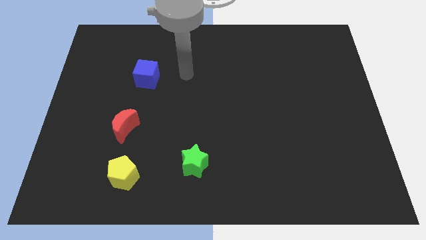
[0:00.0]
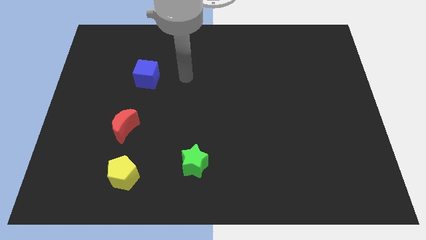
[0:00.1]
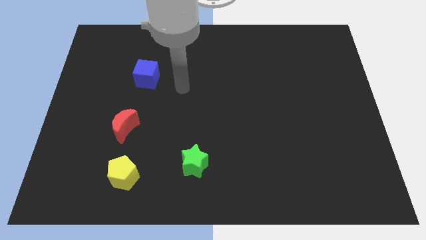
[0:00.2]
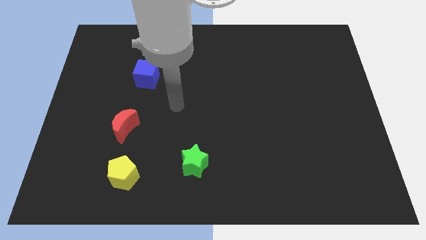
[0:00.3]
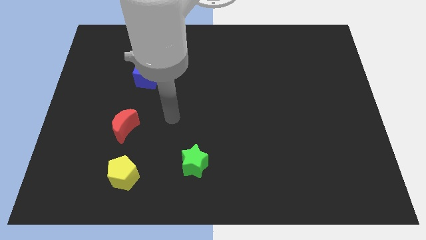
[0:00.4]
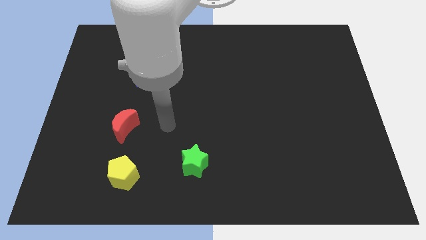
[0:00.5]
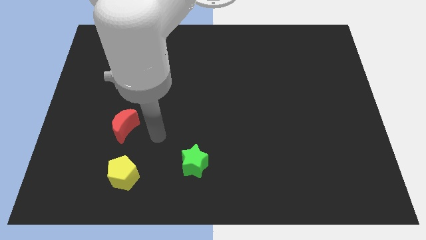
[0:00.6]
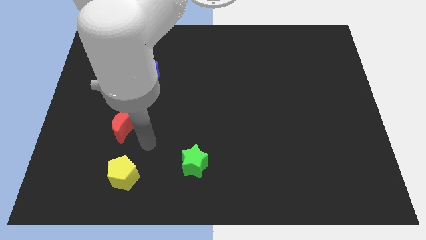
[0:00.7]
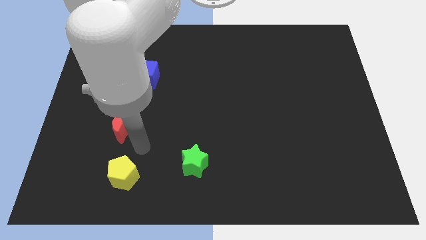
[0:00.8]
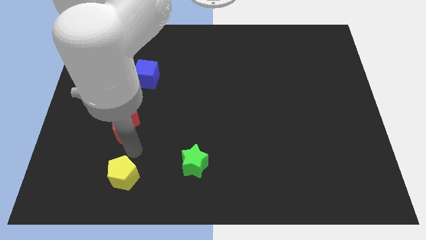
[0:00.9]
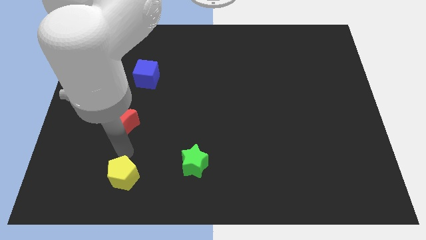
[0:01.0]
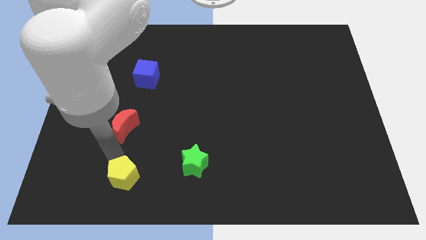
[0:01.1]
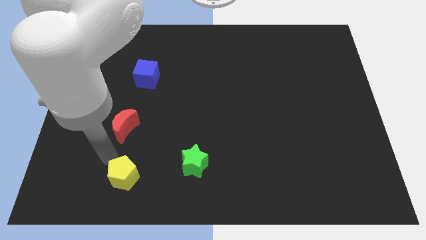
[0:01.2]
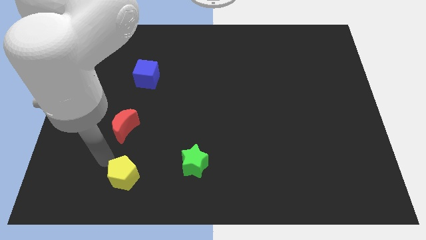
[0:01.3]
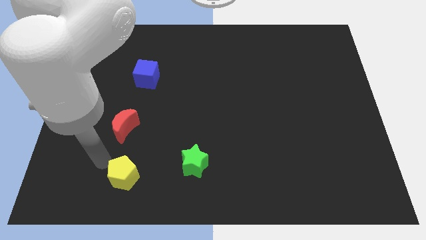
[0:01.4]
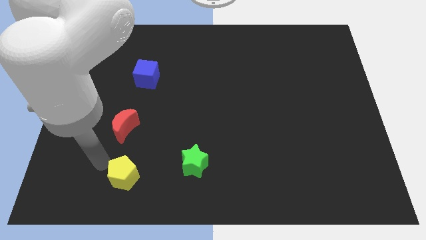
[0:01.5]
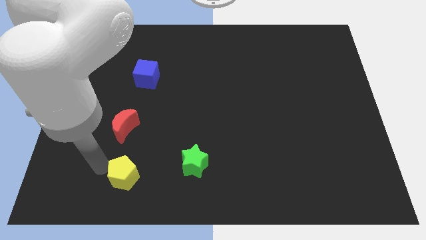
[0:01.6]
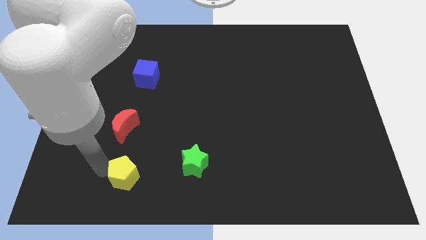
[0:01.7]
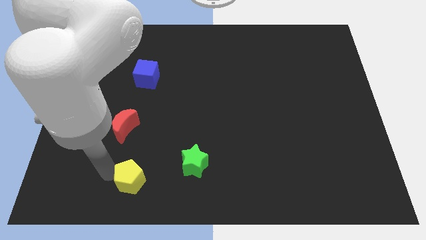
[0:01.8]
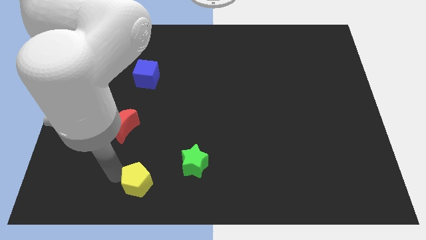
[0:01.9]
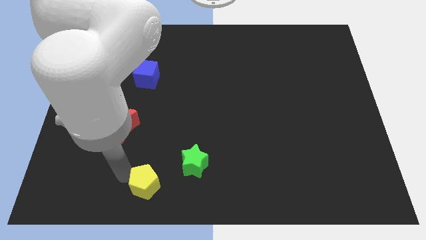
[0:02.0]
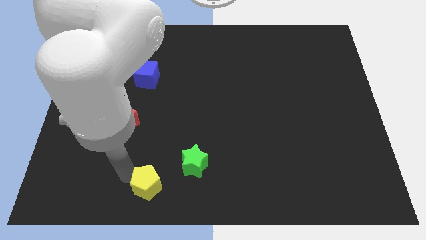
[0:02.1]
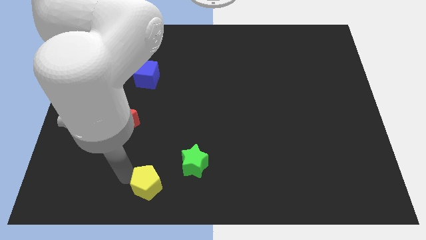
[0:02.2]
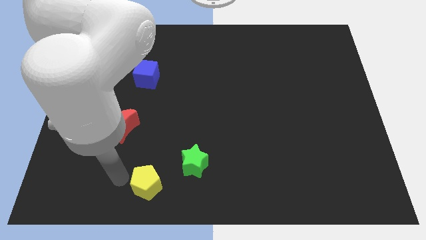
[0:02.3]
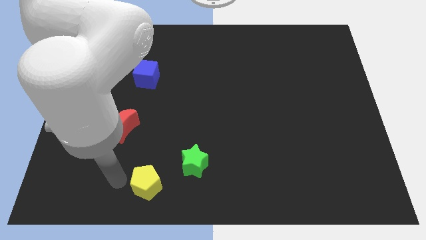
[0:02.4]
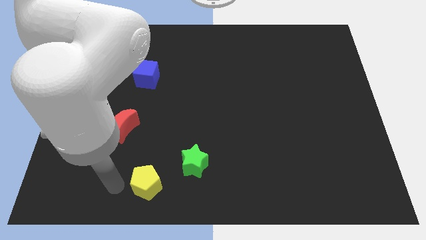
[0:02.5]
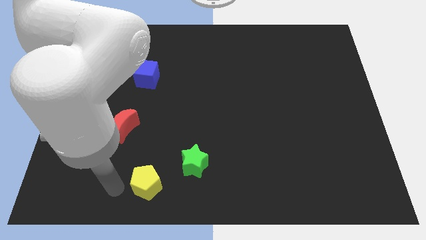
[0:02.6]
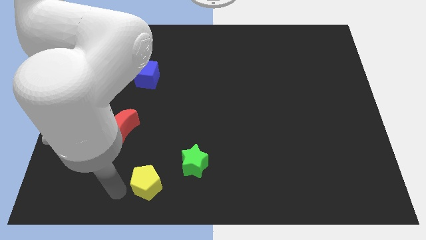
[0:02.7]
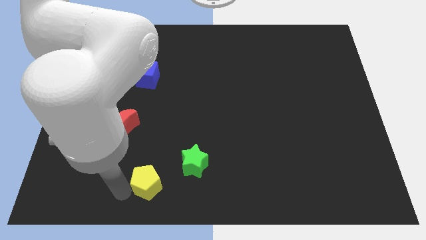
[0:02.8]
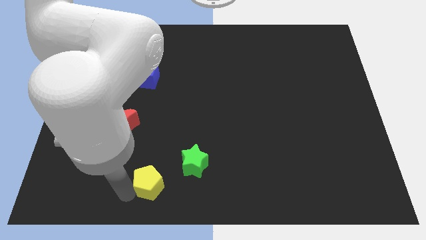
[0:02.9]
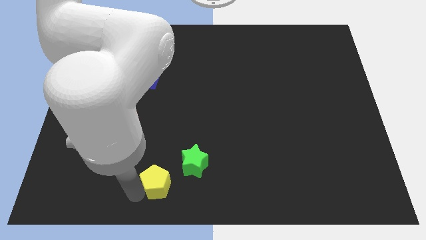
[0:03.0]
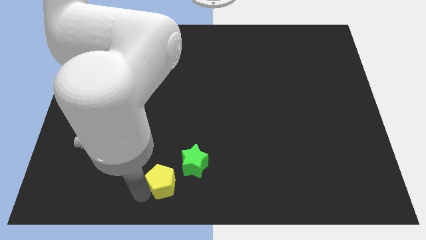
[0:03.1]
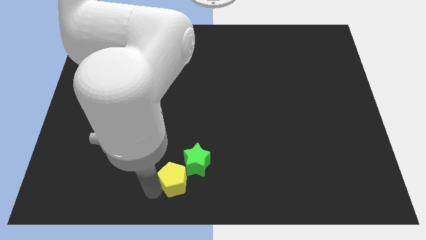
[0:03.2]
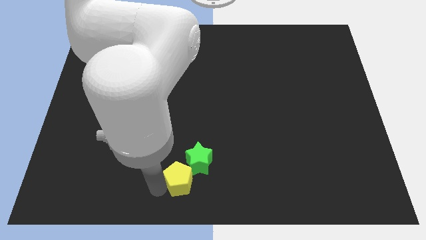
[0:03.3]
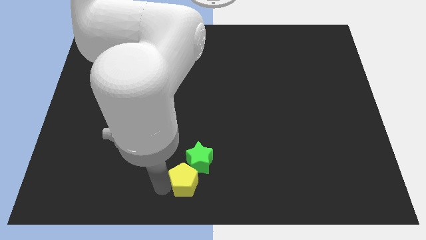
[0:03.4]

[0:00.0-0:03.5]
move the yellow block close to the star

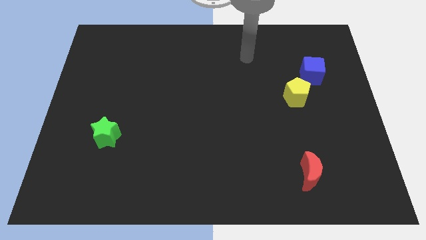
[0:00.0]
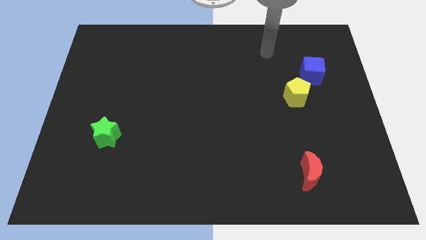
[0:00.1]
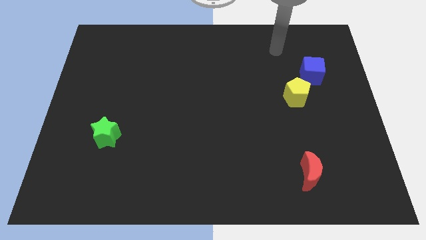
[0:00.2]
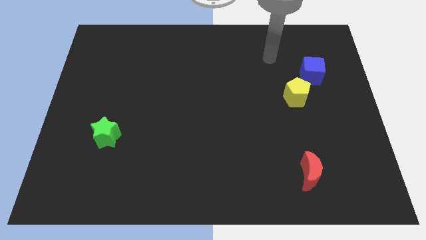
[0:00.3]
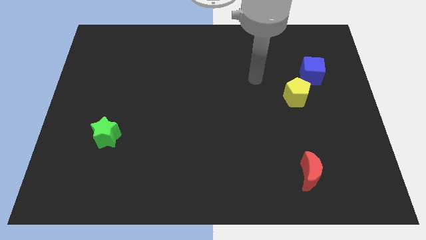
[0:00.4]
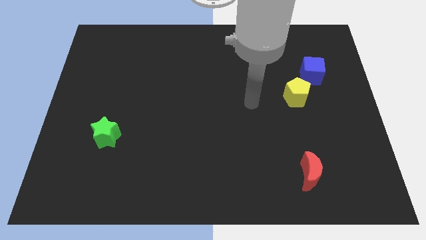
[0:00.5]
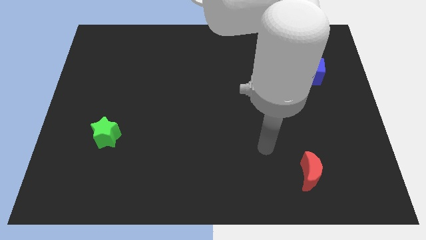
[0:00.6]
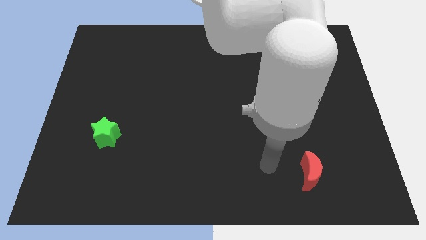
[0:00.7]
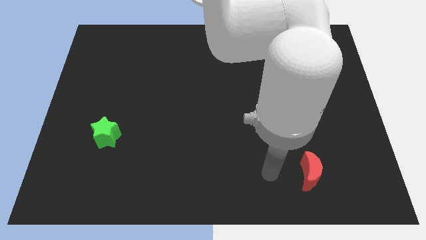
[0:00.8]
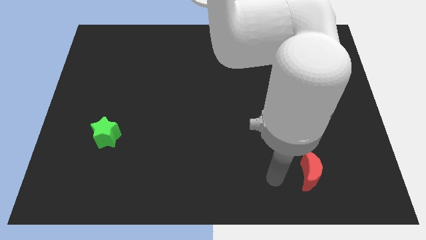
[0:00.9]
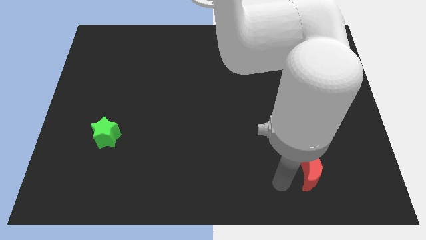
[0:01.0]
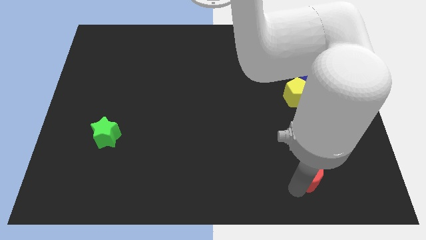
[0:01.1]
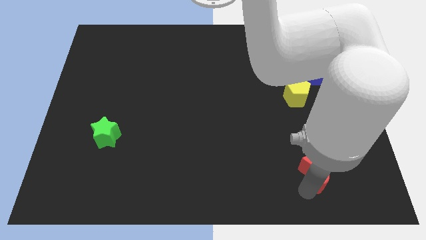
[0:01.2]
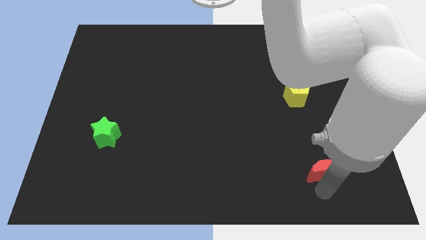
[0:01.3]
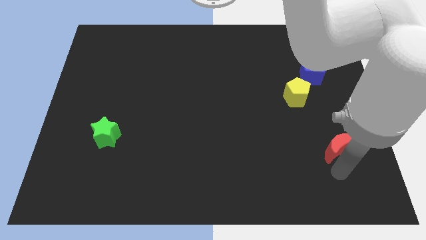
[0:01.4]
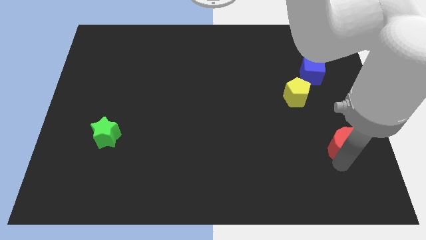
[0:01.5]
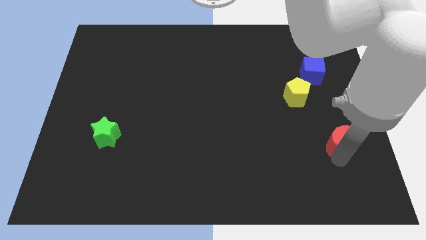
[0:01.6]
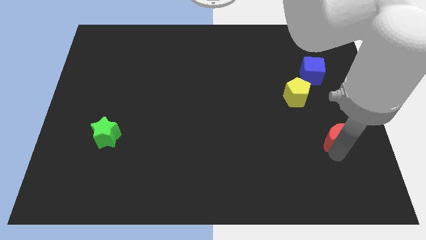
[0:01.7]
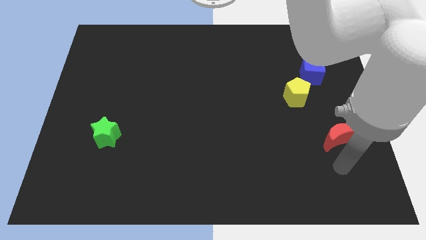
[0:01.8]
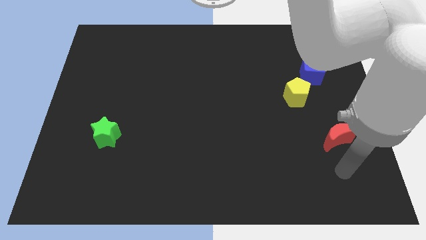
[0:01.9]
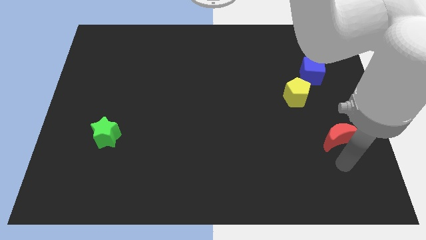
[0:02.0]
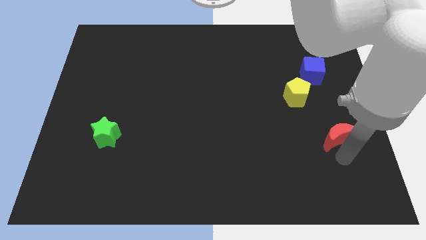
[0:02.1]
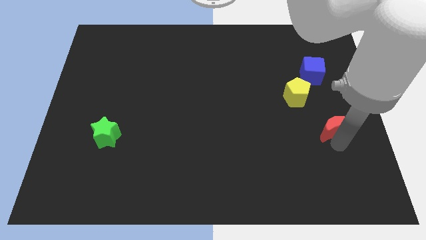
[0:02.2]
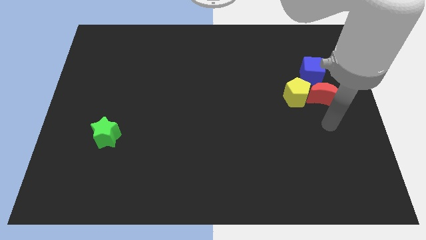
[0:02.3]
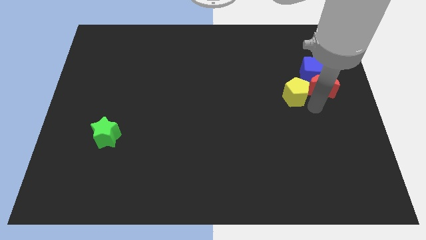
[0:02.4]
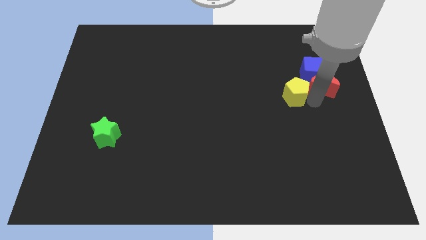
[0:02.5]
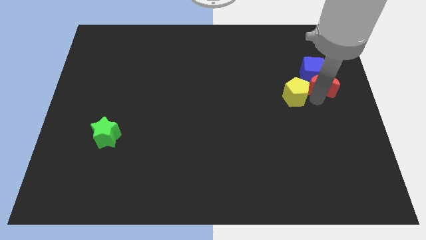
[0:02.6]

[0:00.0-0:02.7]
move the red moon to the blue block

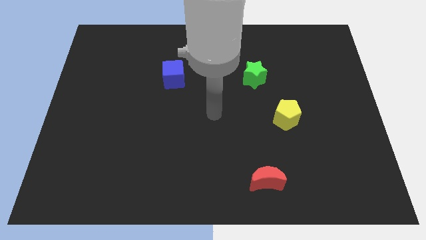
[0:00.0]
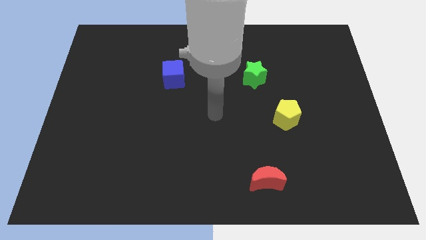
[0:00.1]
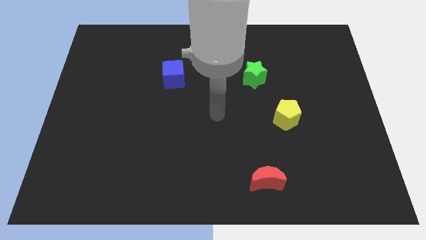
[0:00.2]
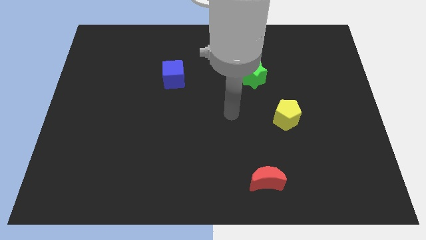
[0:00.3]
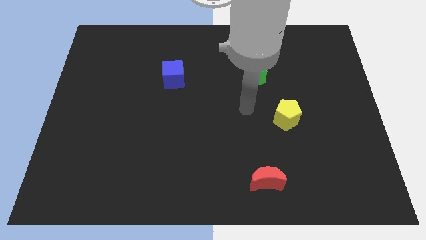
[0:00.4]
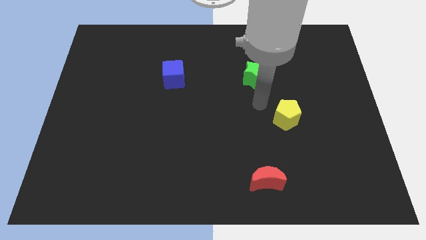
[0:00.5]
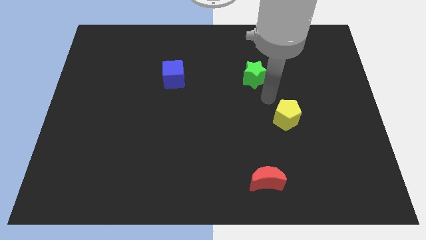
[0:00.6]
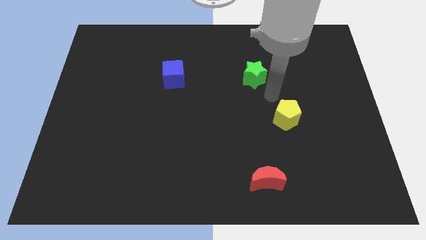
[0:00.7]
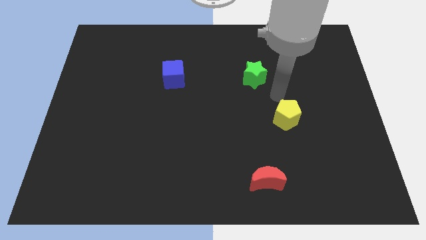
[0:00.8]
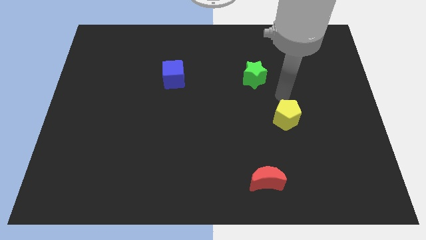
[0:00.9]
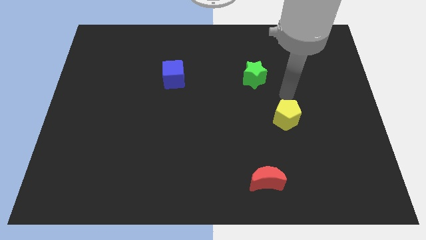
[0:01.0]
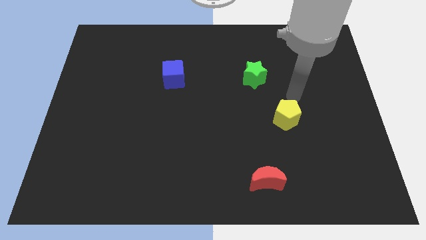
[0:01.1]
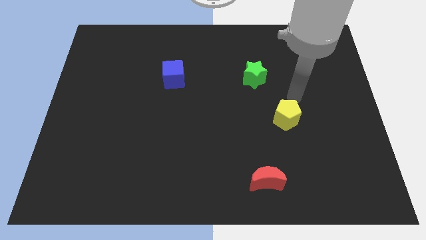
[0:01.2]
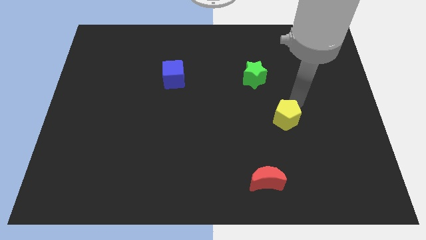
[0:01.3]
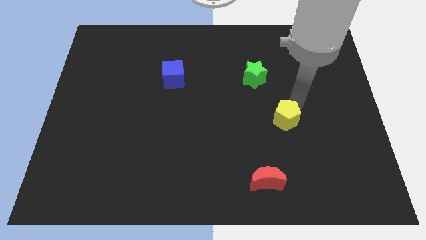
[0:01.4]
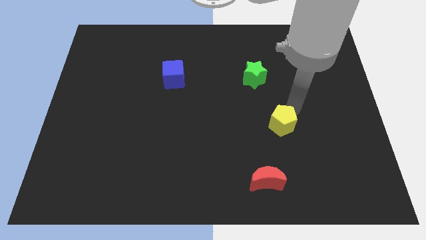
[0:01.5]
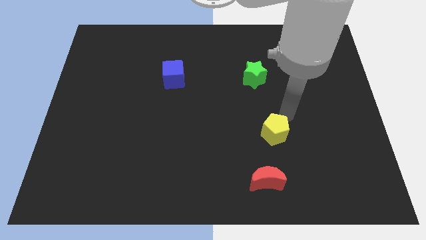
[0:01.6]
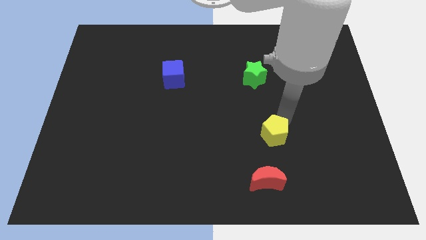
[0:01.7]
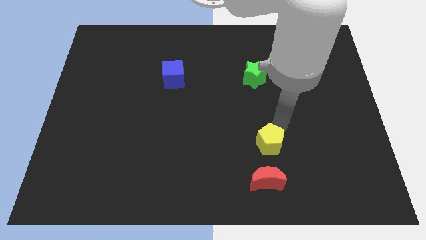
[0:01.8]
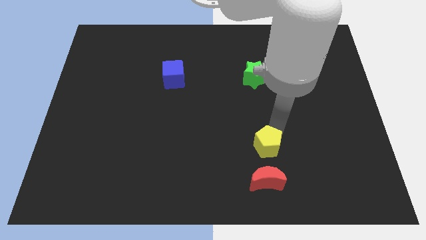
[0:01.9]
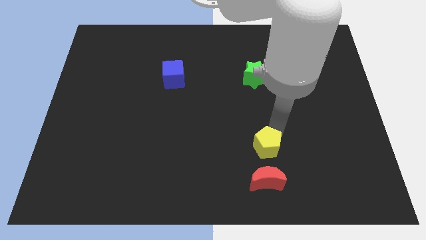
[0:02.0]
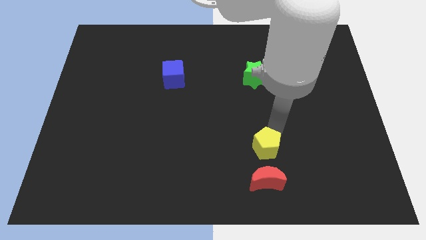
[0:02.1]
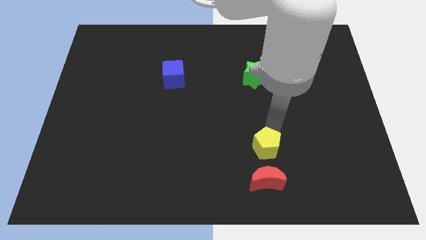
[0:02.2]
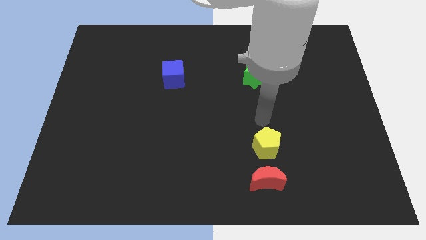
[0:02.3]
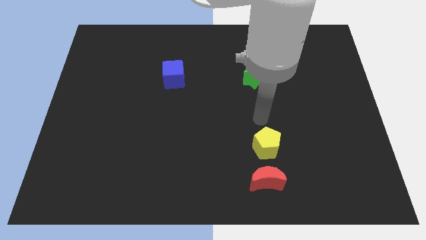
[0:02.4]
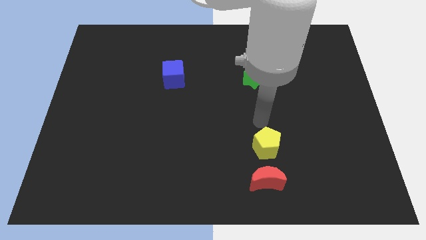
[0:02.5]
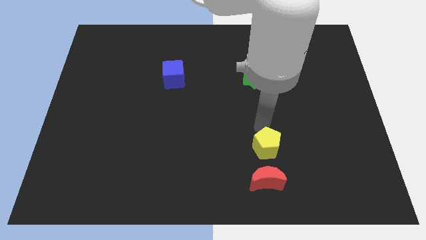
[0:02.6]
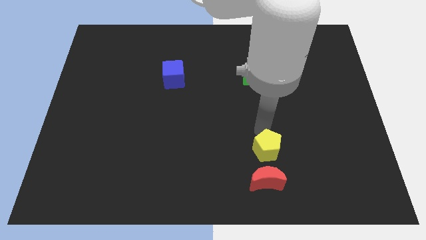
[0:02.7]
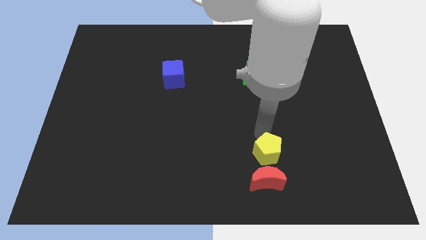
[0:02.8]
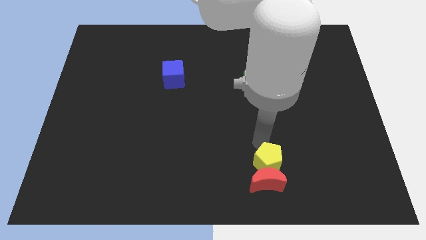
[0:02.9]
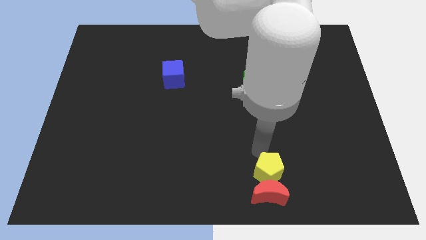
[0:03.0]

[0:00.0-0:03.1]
move the pentagon towards the red moon
